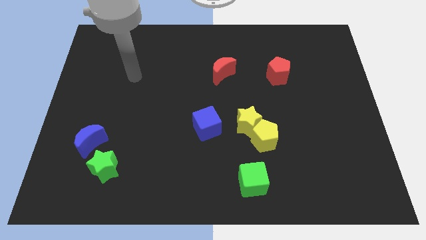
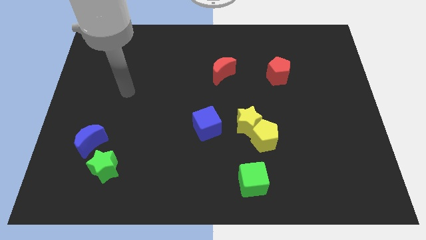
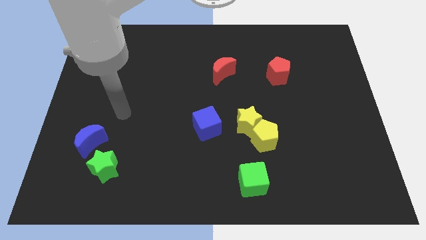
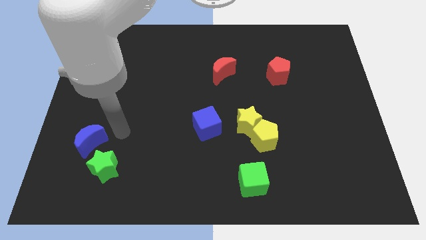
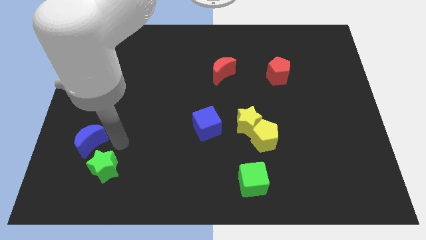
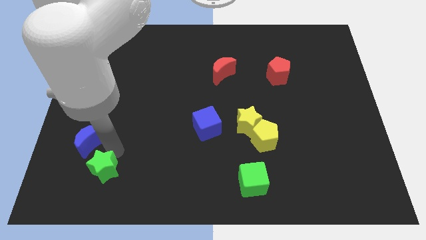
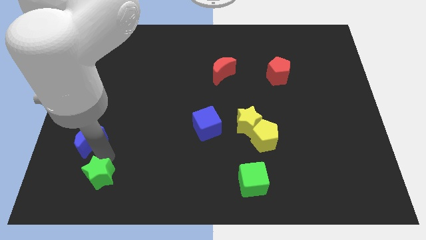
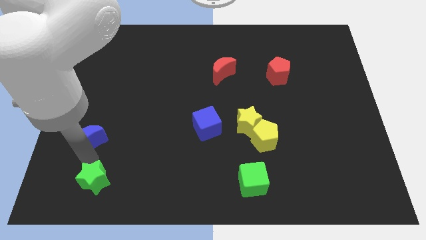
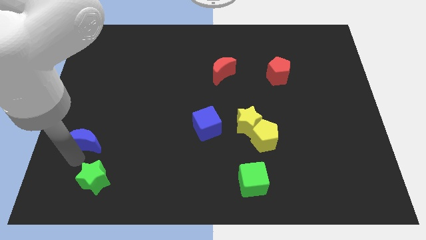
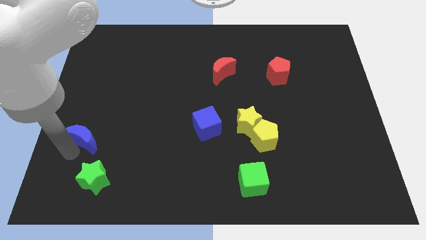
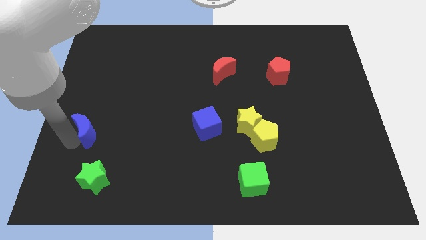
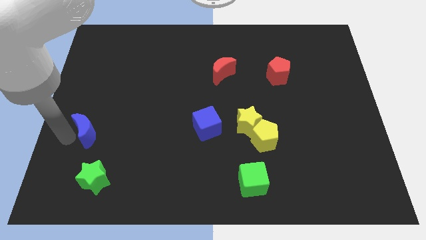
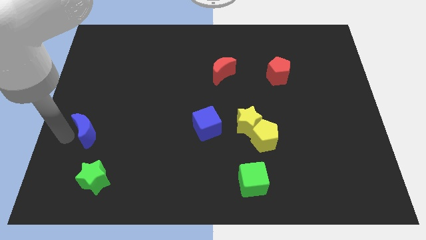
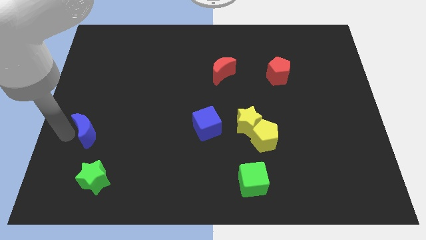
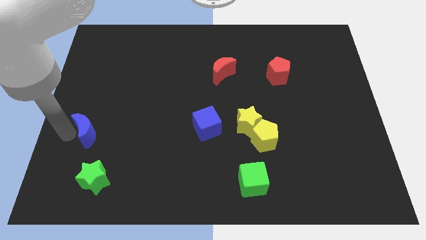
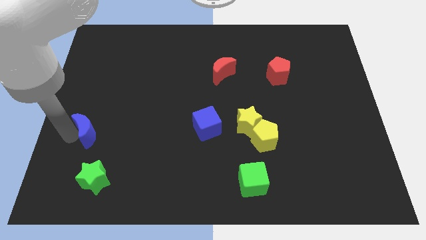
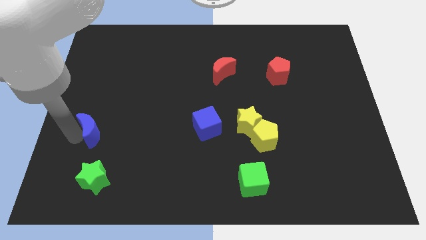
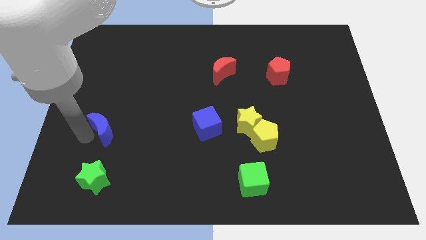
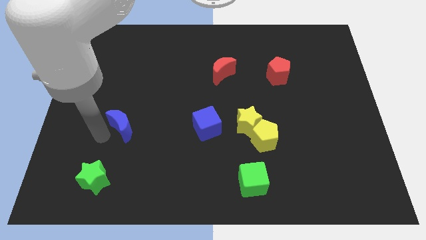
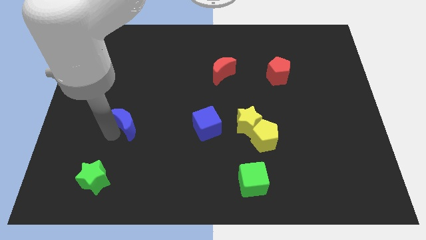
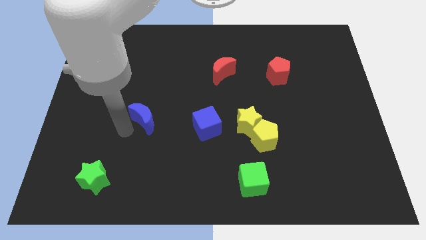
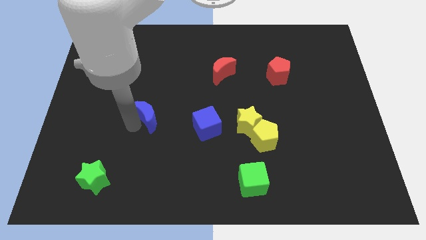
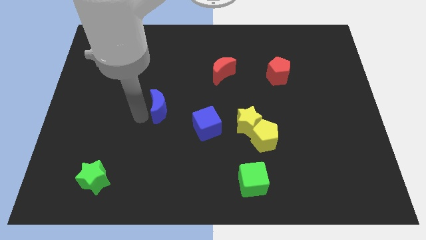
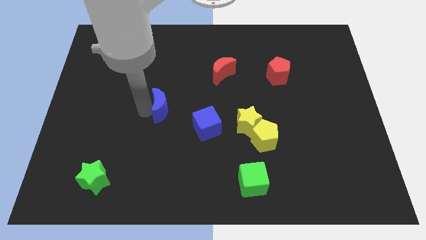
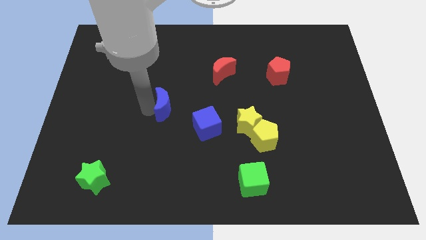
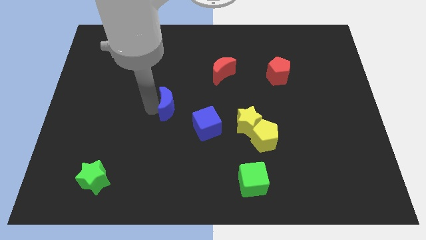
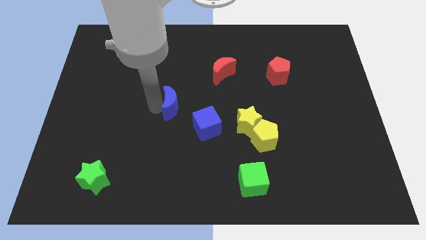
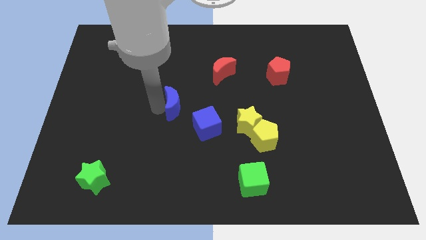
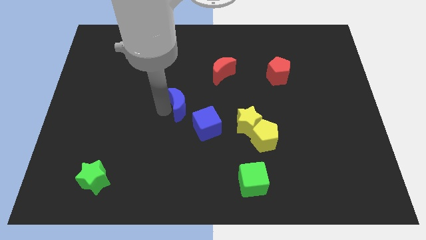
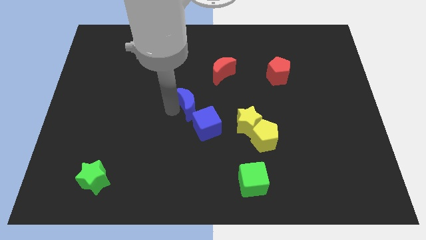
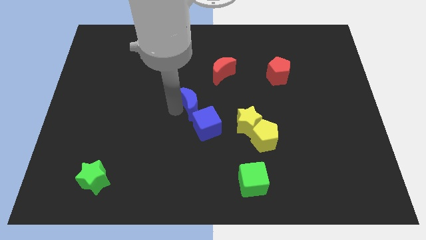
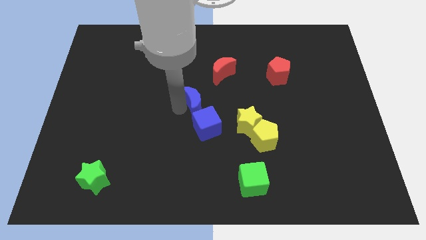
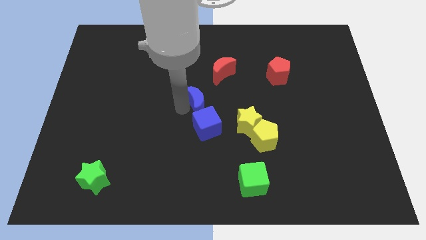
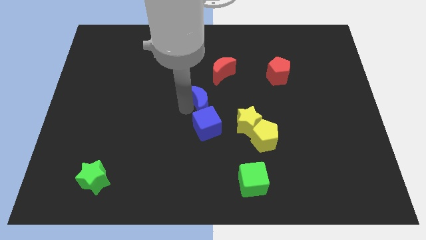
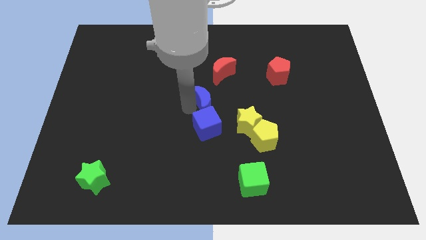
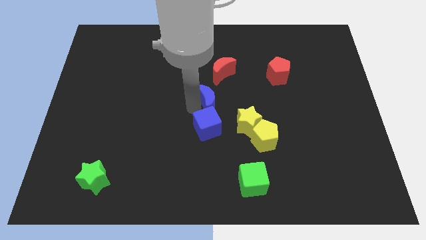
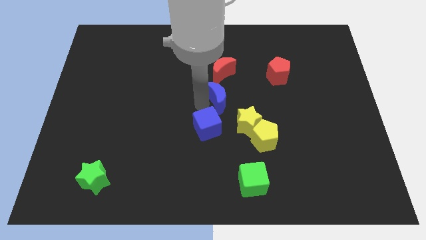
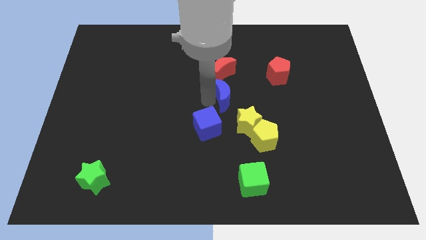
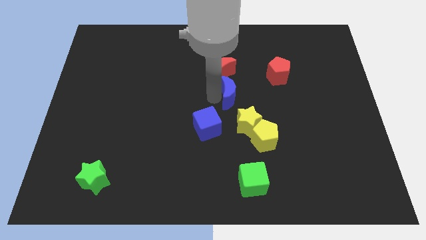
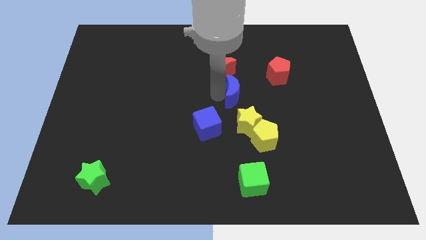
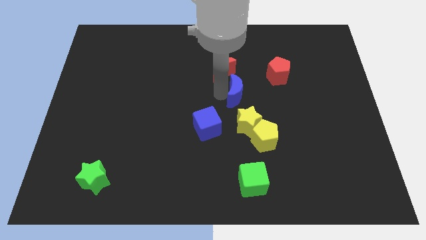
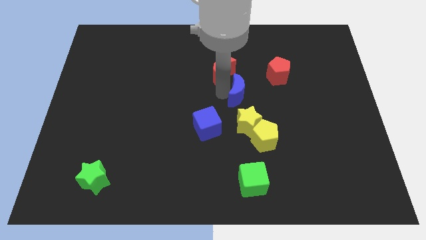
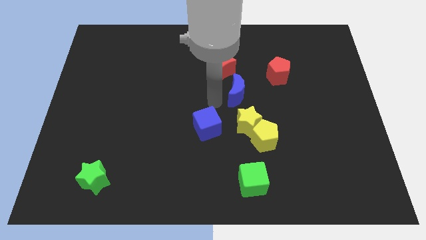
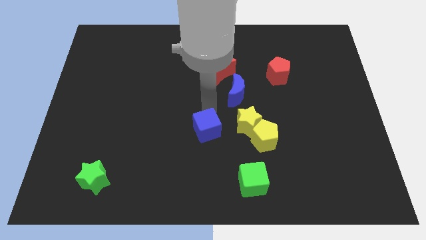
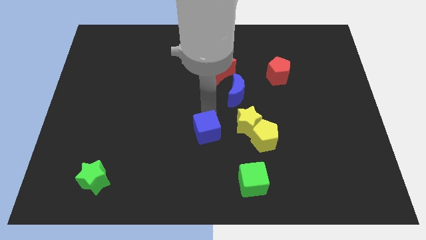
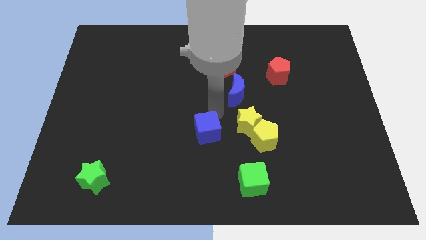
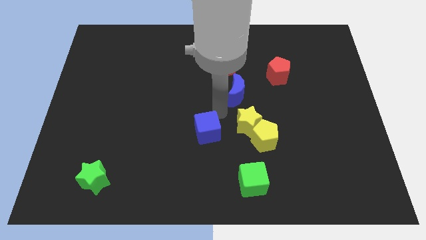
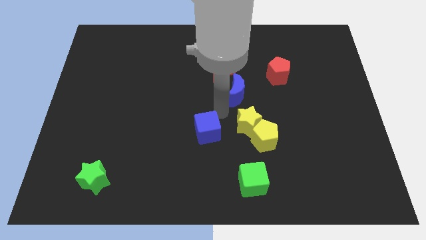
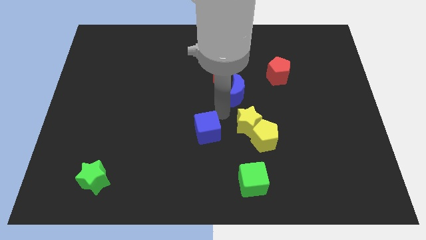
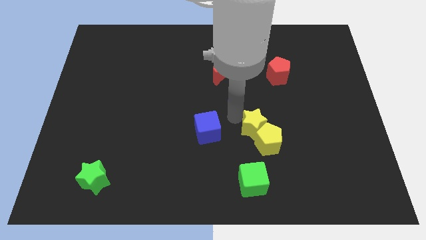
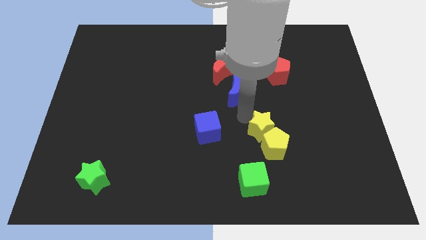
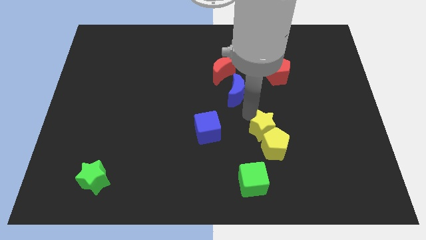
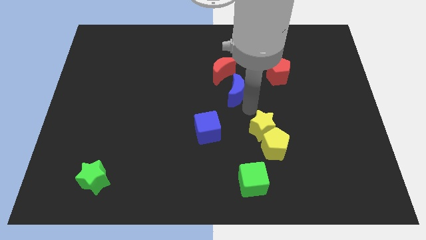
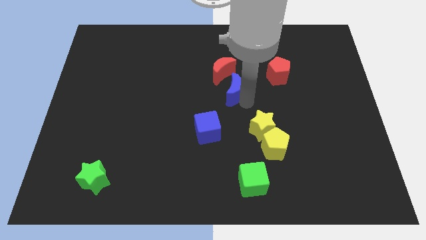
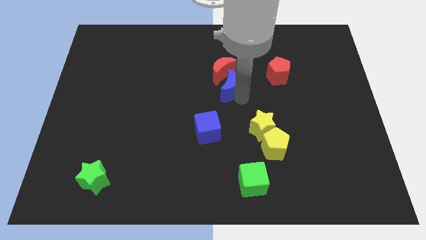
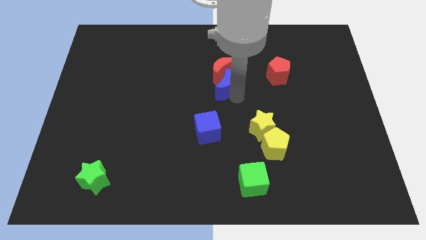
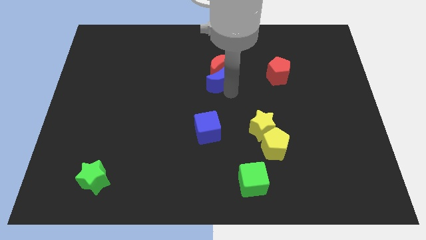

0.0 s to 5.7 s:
push the blue moon to the red moon

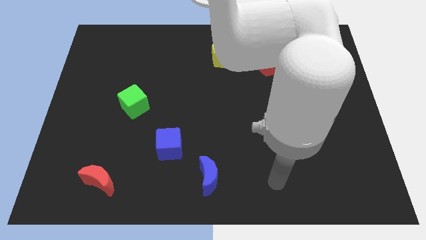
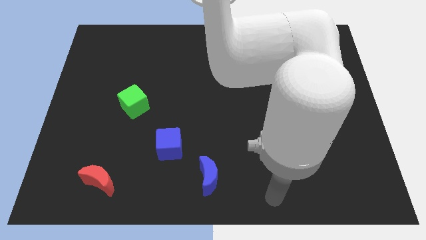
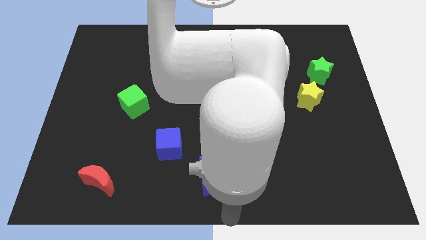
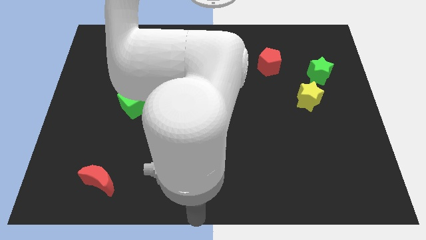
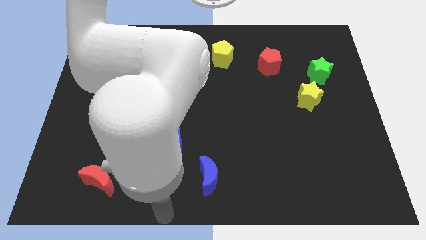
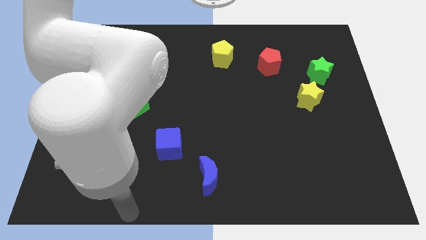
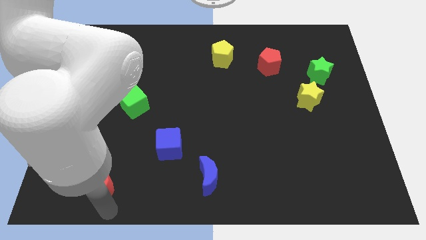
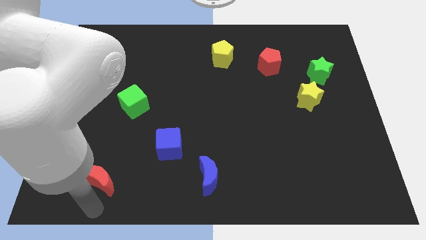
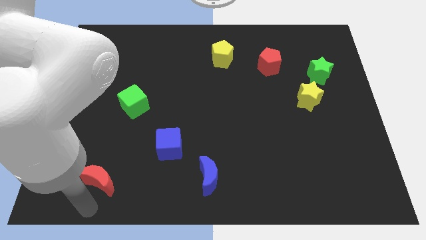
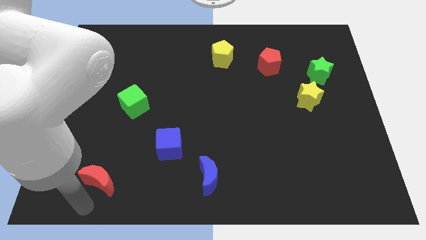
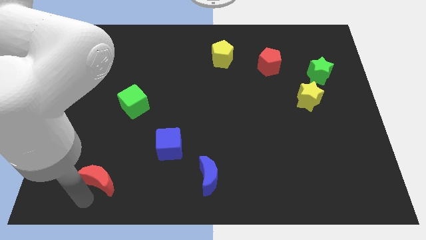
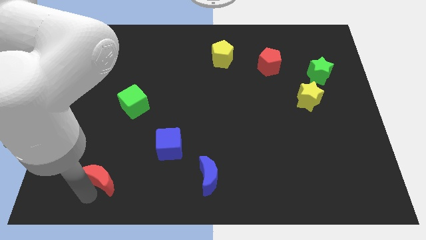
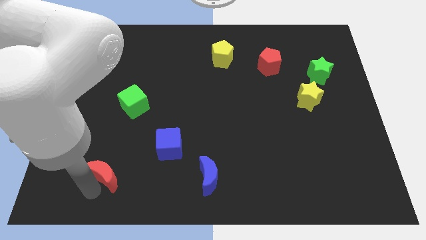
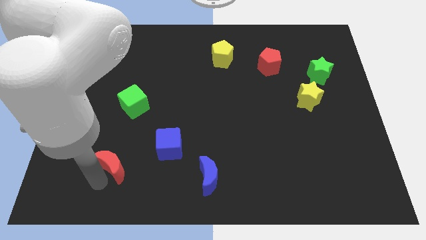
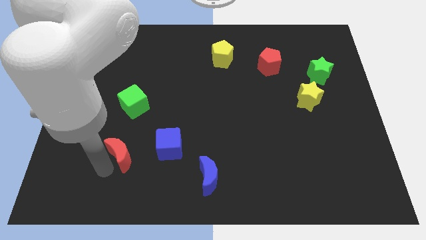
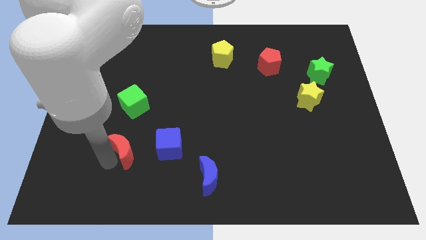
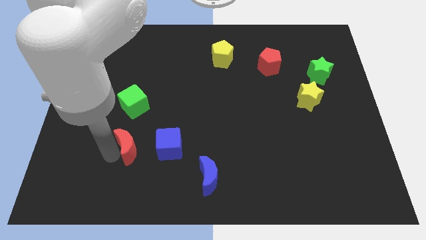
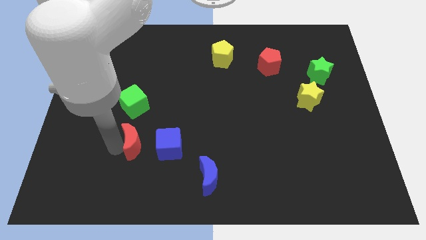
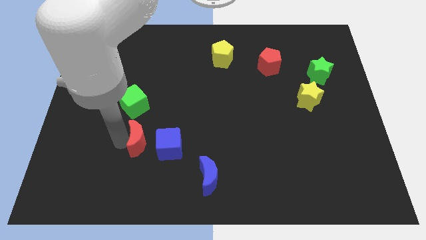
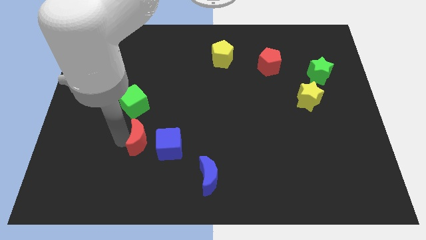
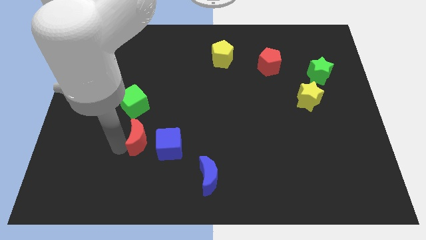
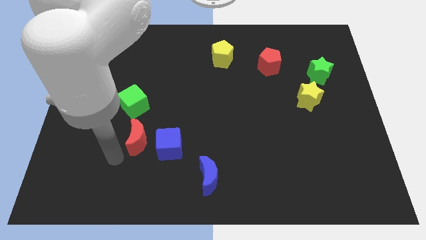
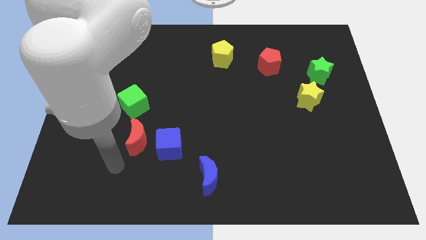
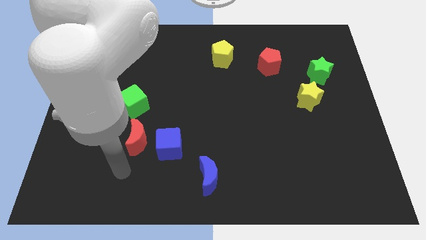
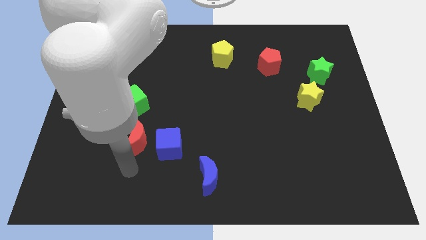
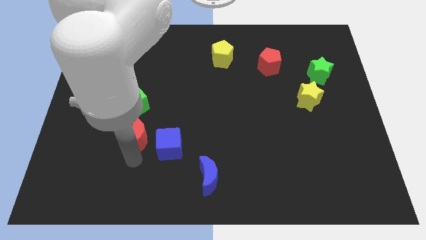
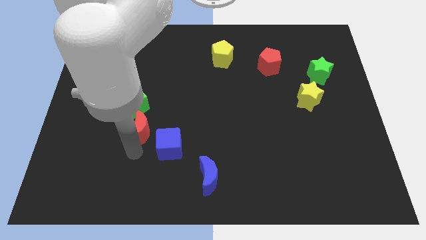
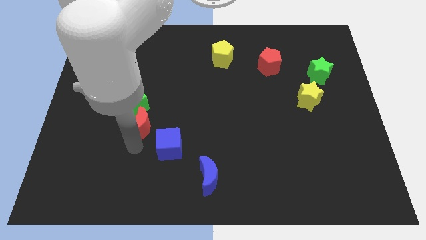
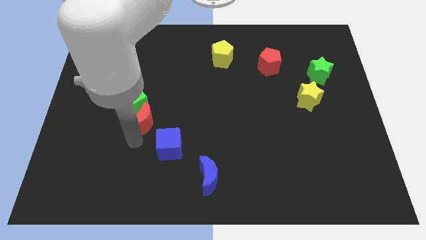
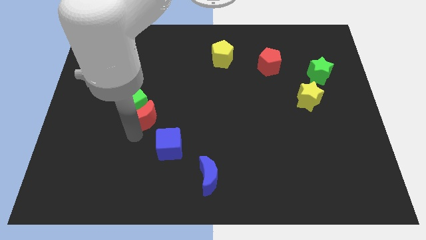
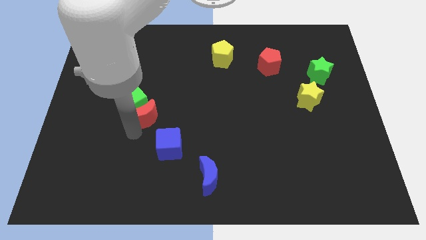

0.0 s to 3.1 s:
slide the red moon next to the green cube
